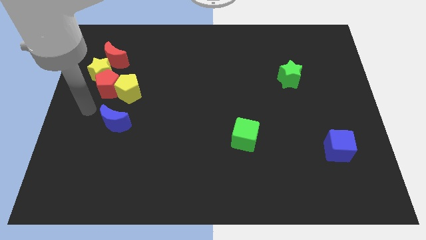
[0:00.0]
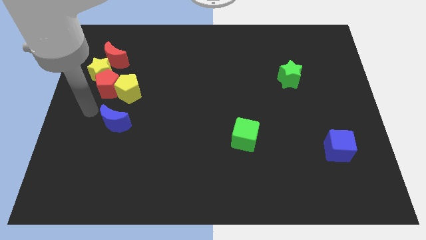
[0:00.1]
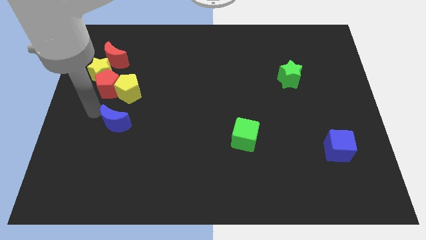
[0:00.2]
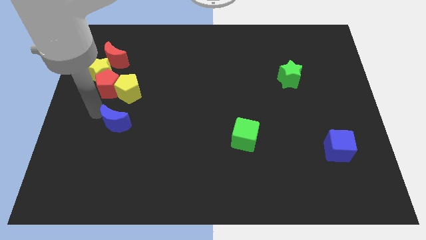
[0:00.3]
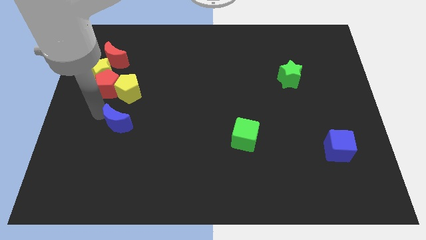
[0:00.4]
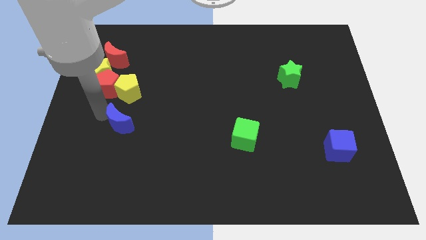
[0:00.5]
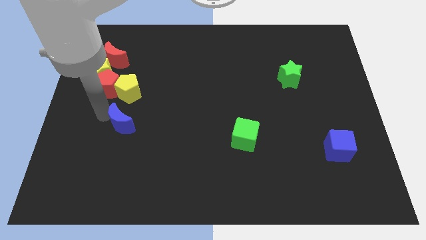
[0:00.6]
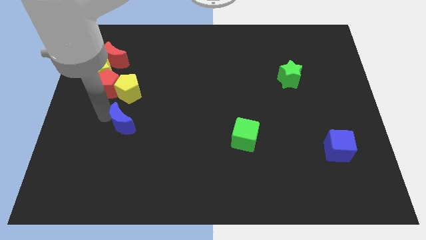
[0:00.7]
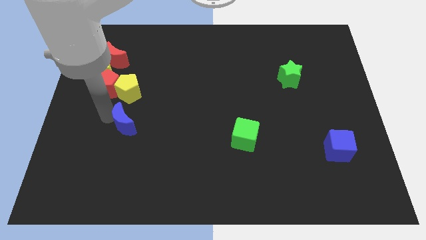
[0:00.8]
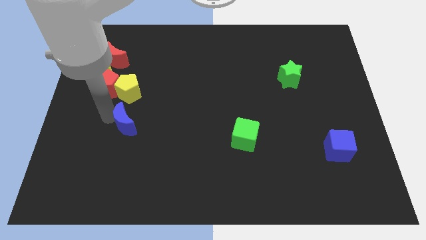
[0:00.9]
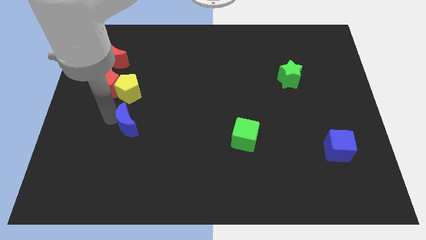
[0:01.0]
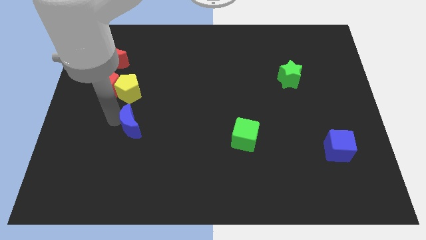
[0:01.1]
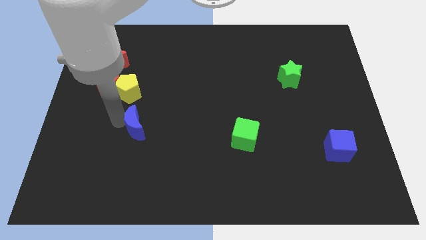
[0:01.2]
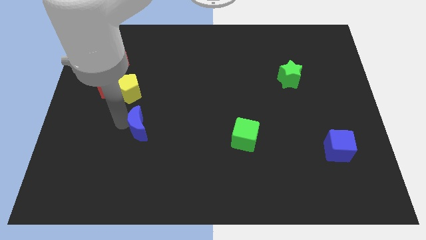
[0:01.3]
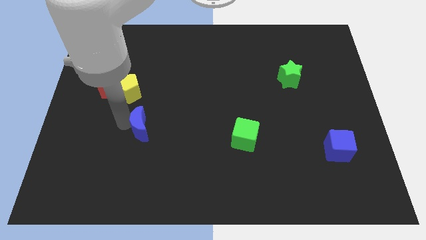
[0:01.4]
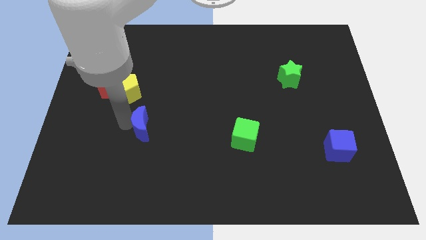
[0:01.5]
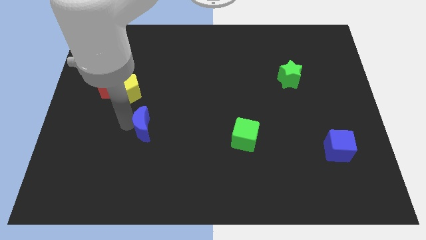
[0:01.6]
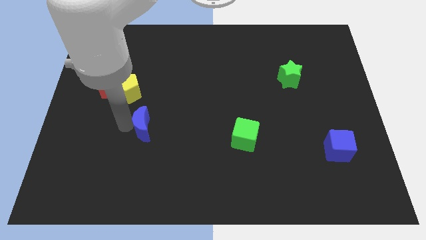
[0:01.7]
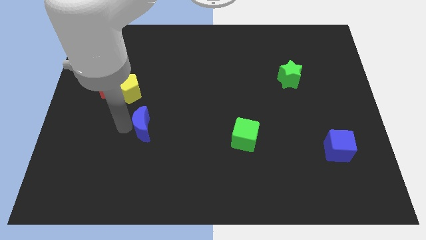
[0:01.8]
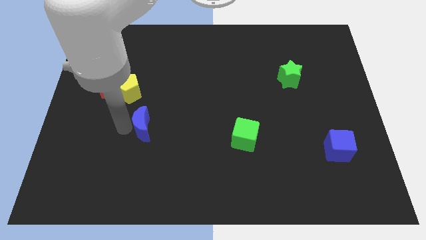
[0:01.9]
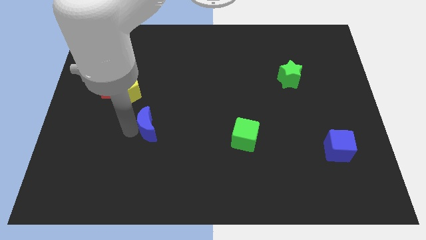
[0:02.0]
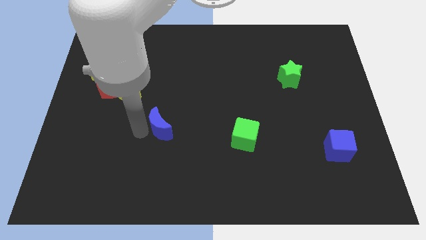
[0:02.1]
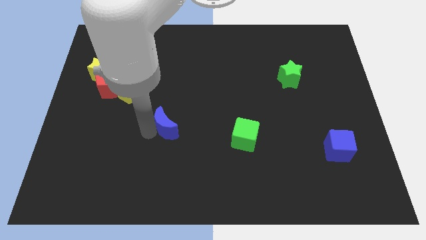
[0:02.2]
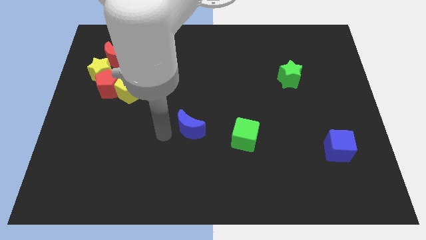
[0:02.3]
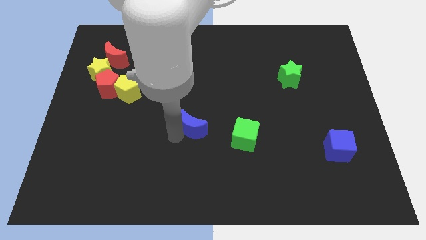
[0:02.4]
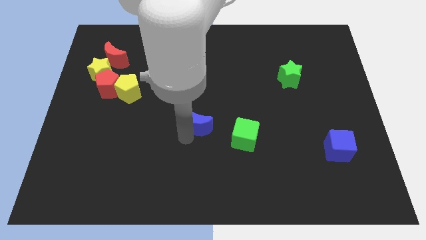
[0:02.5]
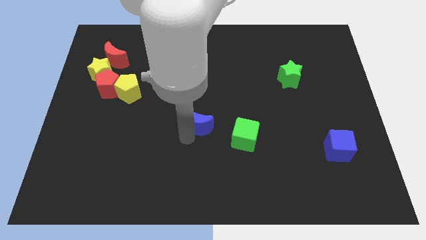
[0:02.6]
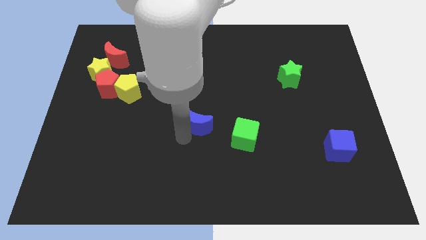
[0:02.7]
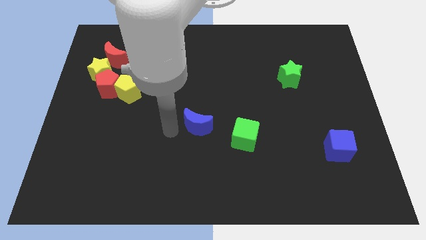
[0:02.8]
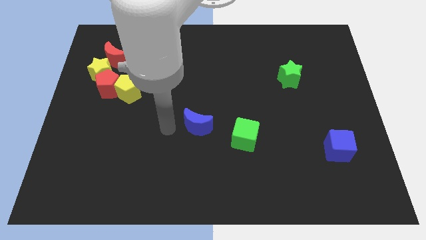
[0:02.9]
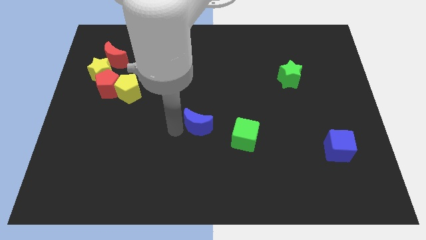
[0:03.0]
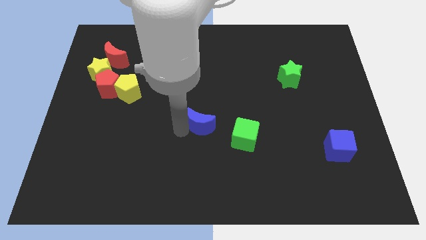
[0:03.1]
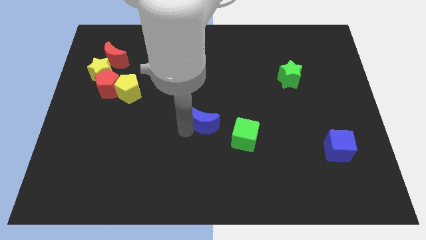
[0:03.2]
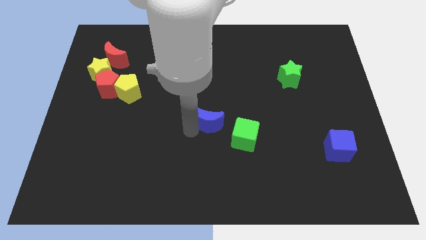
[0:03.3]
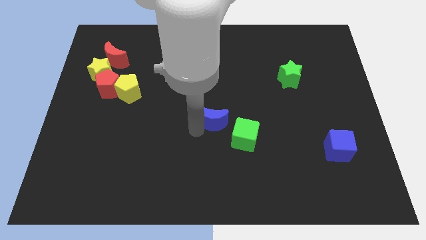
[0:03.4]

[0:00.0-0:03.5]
move the blue crescent to the left of the green cube

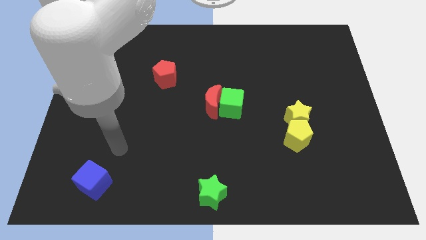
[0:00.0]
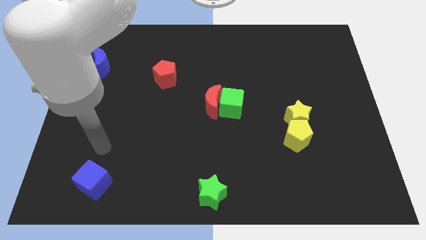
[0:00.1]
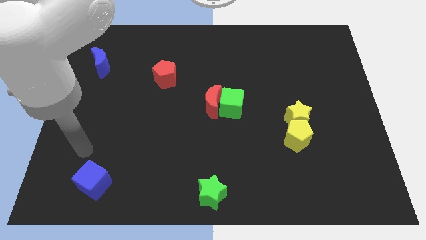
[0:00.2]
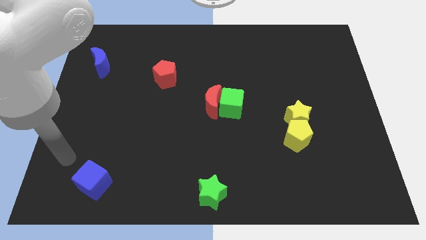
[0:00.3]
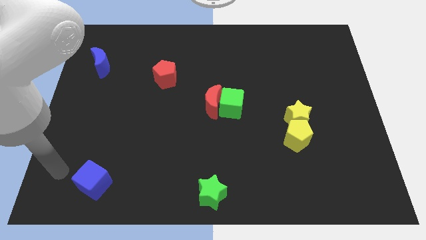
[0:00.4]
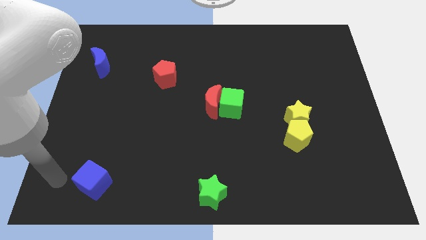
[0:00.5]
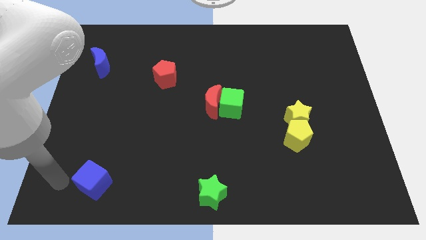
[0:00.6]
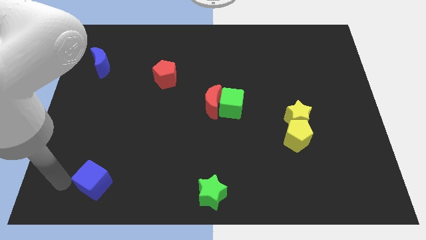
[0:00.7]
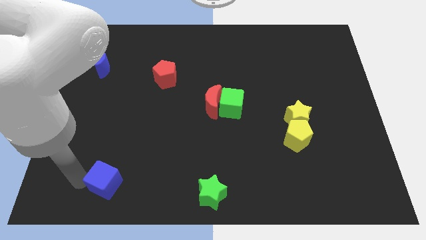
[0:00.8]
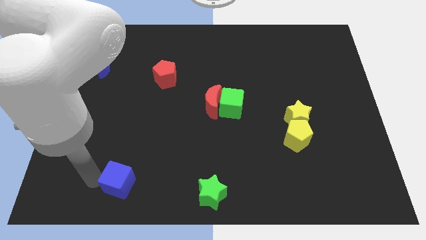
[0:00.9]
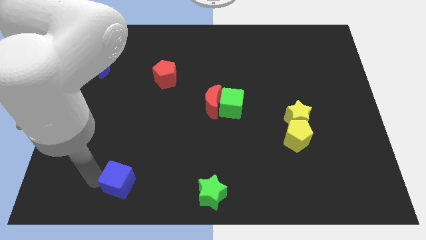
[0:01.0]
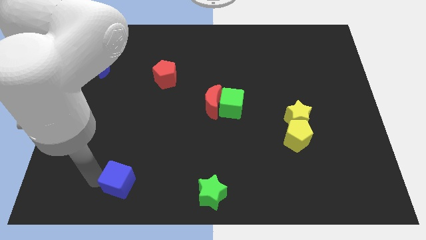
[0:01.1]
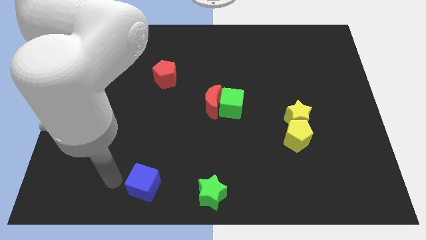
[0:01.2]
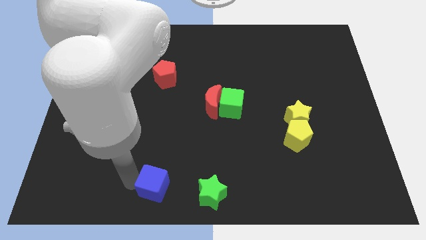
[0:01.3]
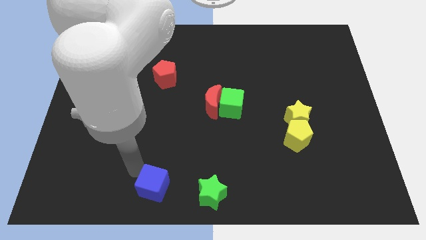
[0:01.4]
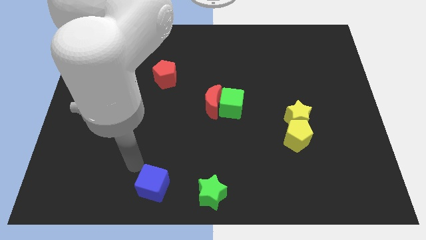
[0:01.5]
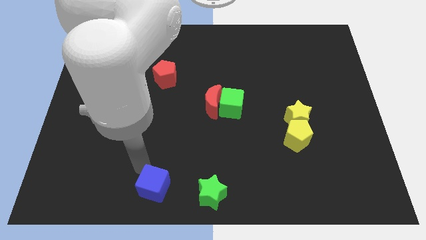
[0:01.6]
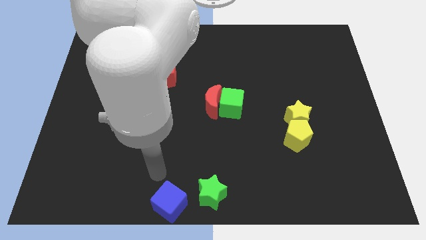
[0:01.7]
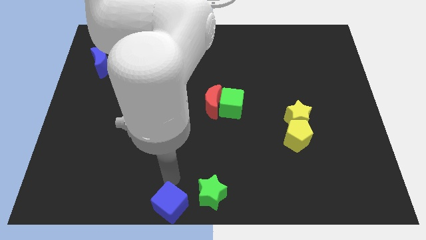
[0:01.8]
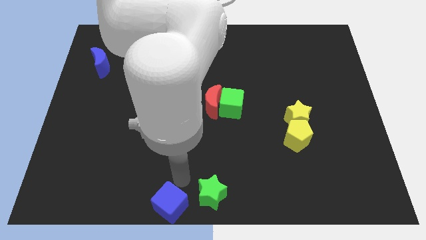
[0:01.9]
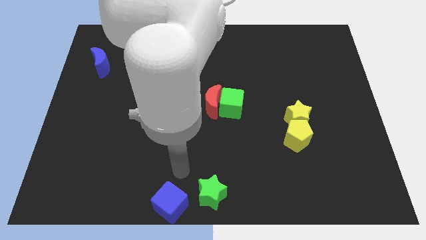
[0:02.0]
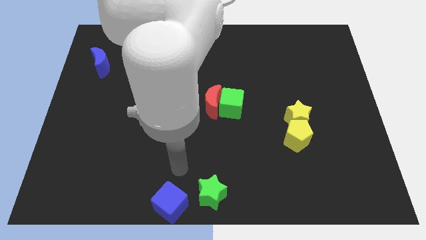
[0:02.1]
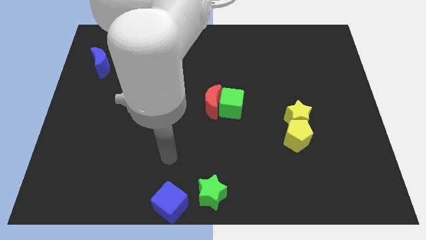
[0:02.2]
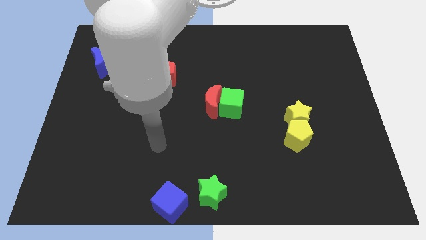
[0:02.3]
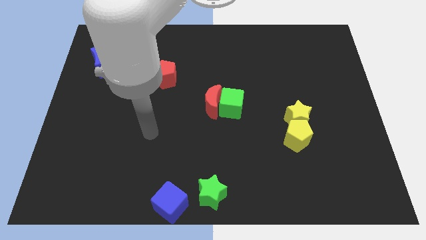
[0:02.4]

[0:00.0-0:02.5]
move the blue cube to the left of the green star

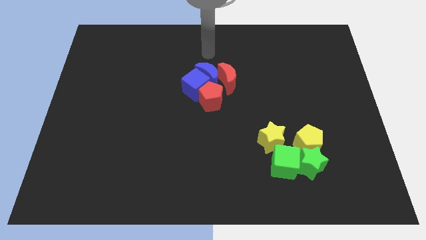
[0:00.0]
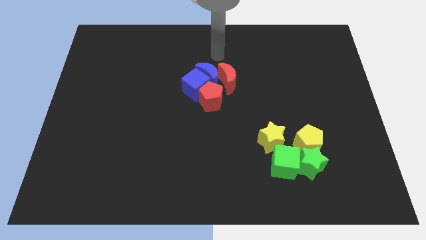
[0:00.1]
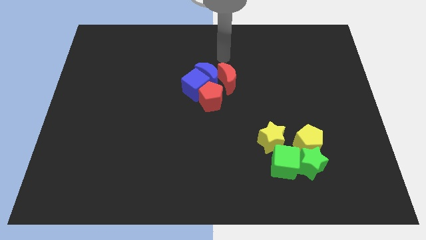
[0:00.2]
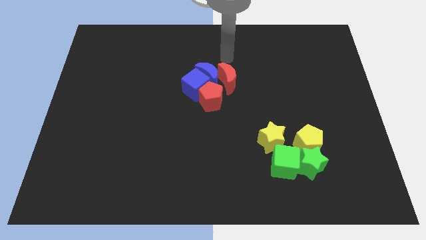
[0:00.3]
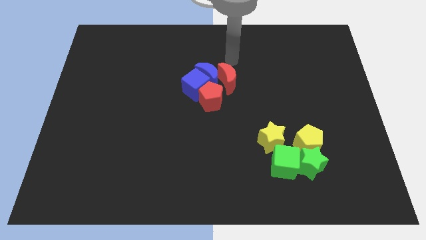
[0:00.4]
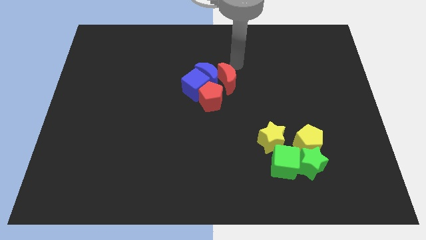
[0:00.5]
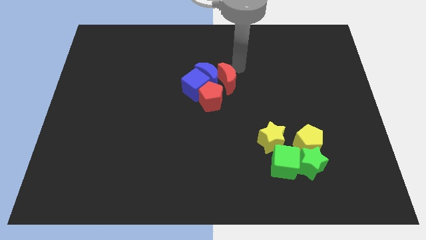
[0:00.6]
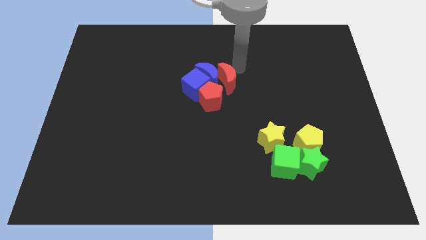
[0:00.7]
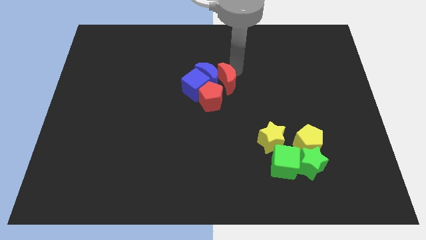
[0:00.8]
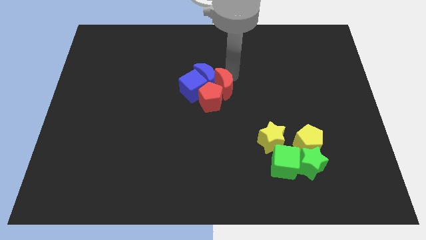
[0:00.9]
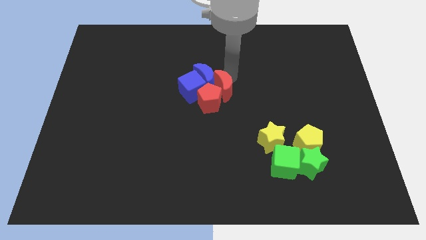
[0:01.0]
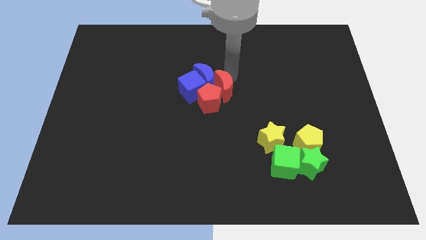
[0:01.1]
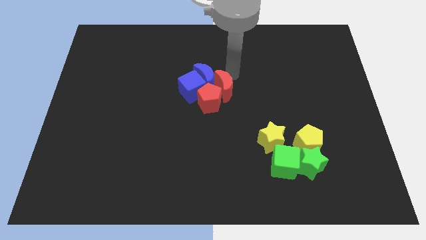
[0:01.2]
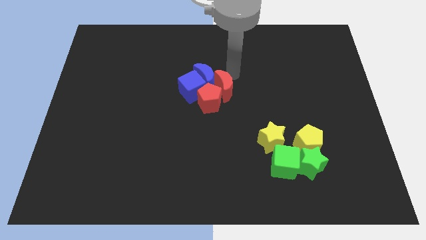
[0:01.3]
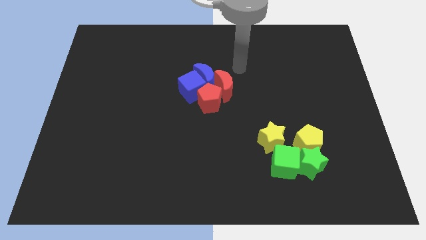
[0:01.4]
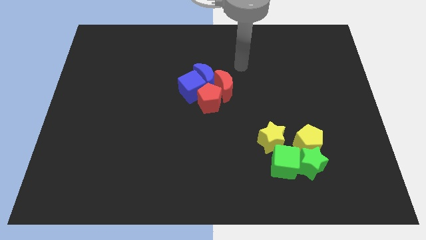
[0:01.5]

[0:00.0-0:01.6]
push the red crescent into the red pentagon

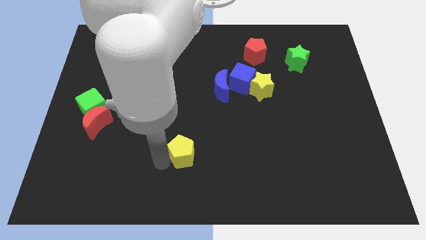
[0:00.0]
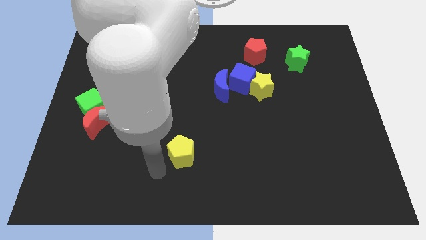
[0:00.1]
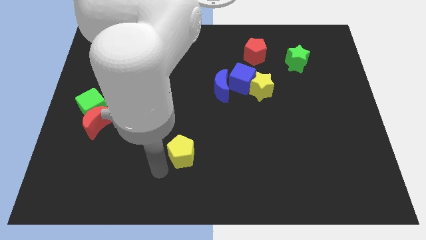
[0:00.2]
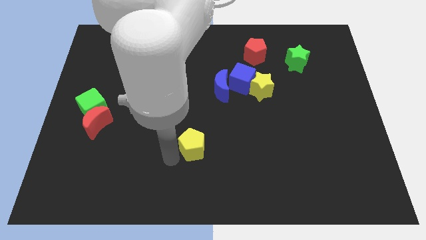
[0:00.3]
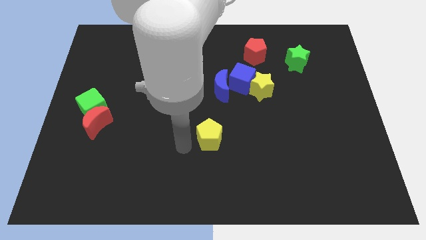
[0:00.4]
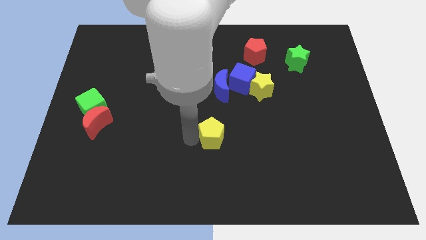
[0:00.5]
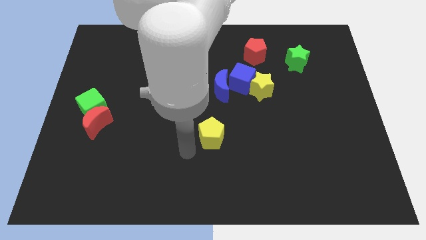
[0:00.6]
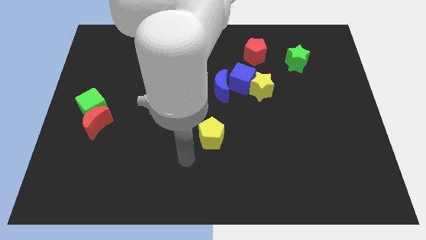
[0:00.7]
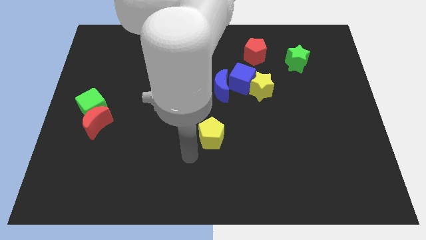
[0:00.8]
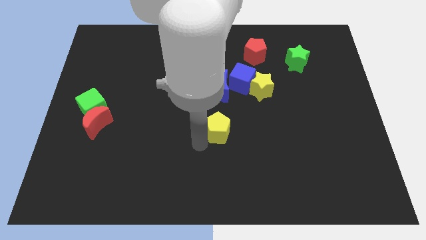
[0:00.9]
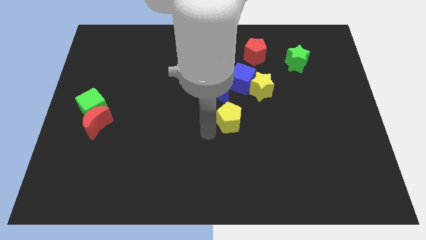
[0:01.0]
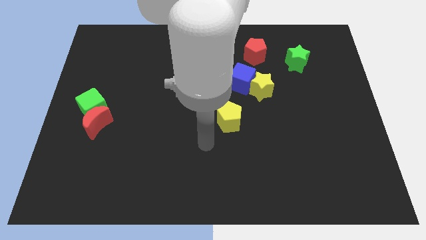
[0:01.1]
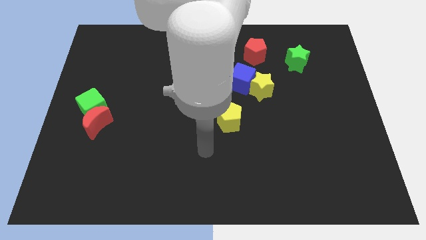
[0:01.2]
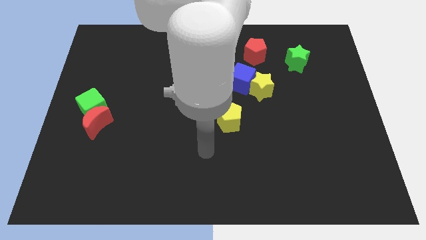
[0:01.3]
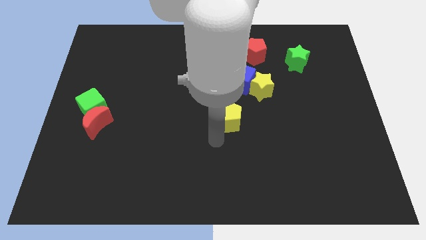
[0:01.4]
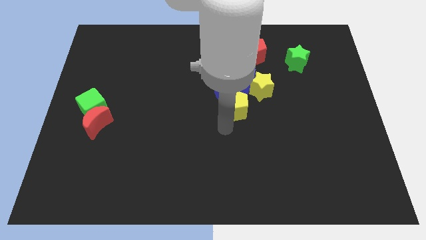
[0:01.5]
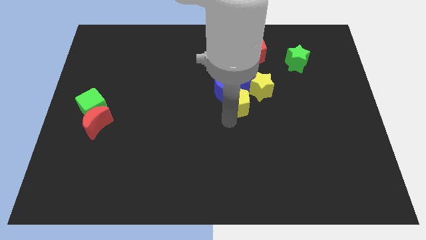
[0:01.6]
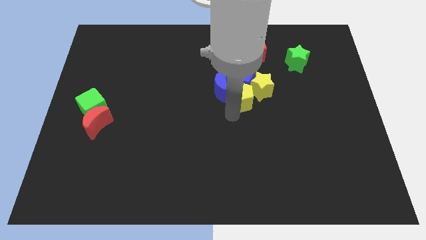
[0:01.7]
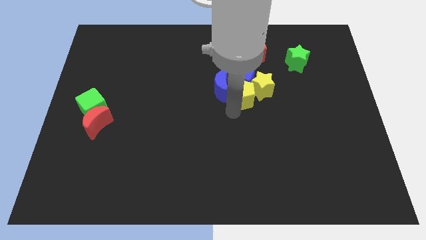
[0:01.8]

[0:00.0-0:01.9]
push the yellow pentagon into the yellow star
